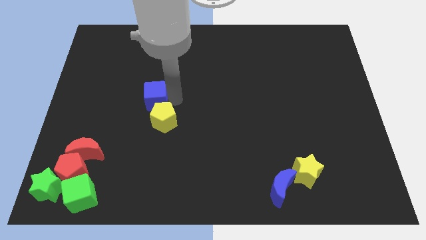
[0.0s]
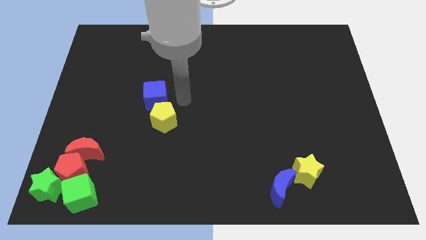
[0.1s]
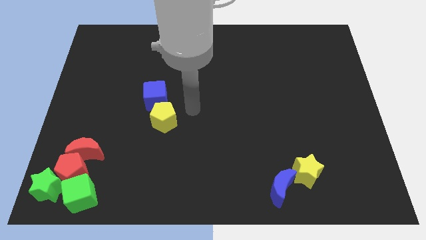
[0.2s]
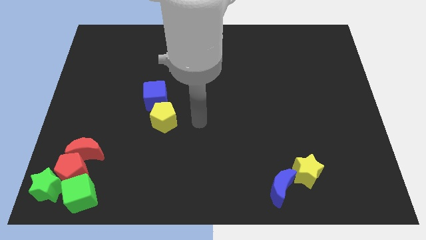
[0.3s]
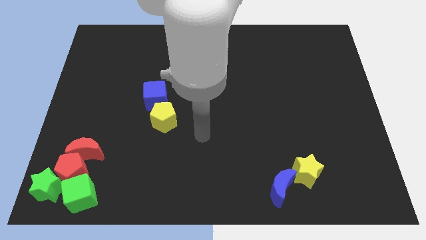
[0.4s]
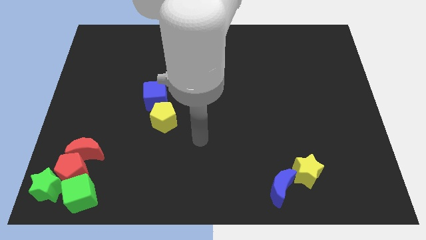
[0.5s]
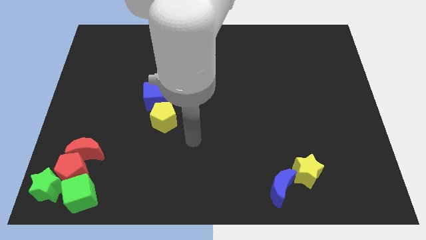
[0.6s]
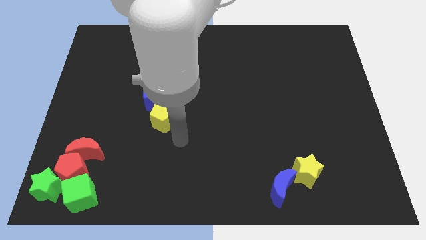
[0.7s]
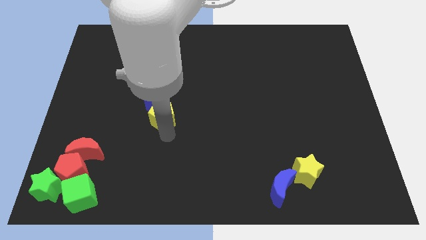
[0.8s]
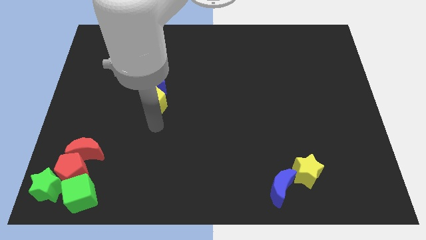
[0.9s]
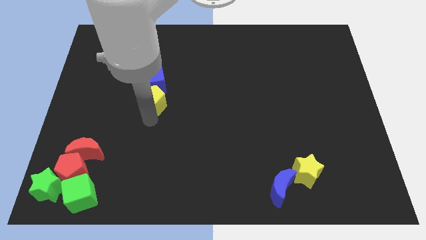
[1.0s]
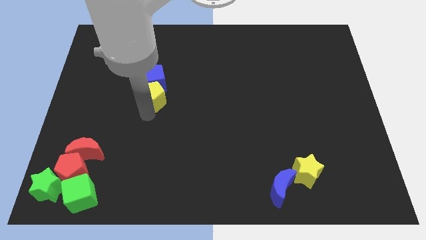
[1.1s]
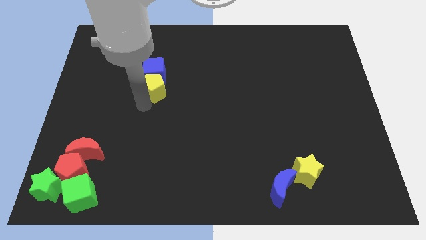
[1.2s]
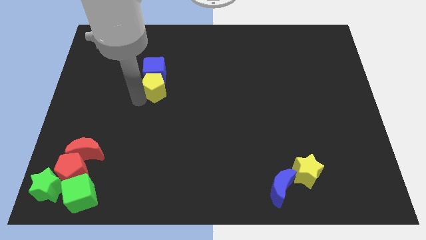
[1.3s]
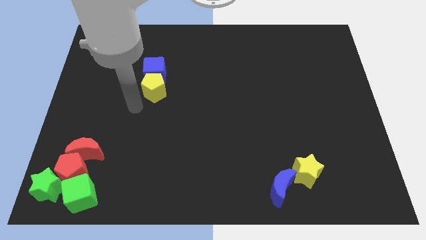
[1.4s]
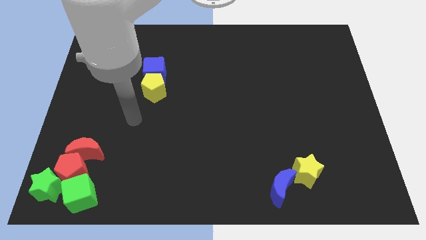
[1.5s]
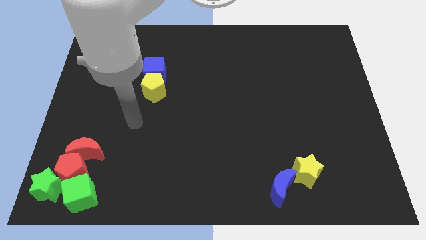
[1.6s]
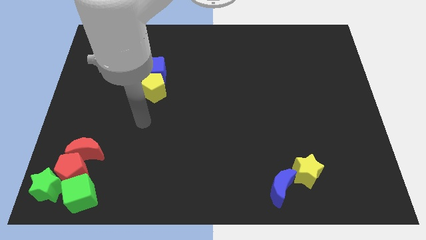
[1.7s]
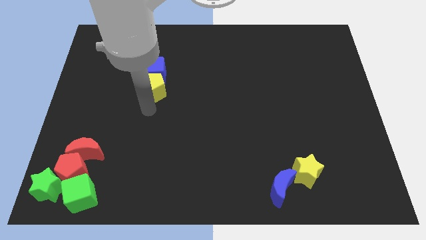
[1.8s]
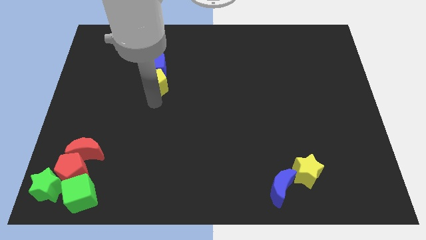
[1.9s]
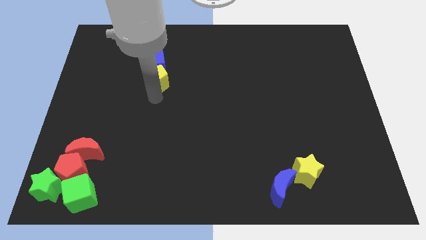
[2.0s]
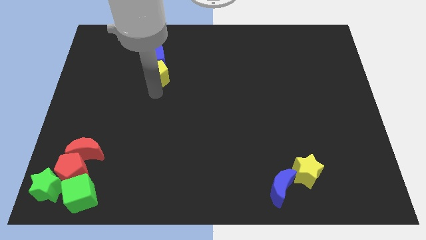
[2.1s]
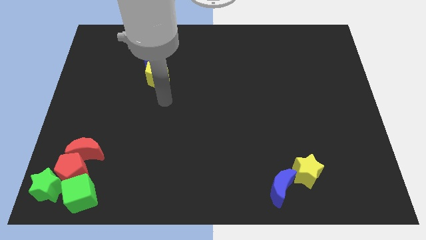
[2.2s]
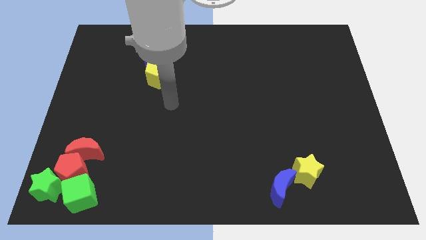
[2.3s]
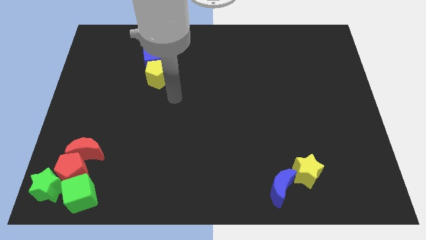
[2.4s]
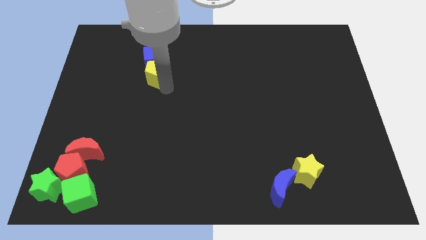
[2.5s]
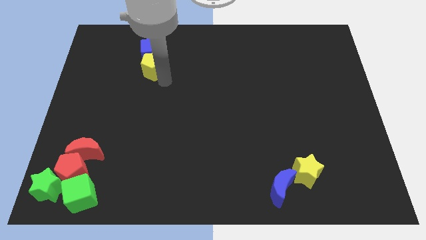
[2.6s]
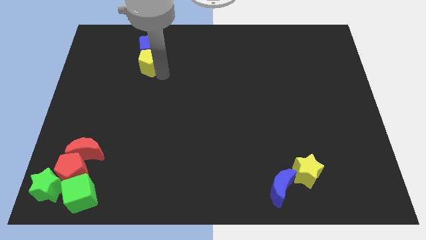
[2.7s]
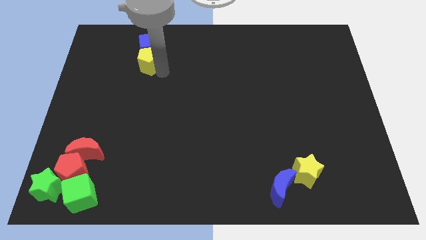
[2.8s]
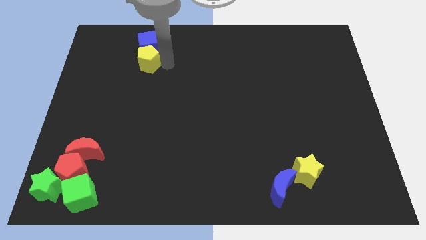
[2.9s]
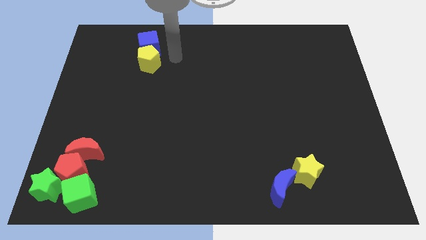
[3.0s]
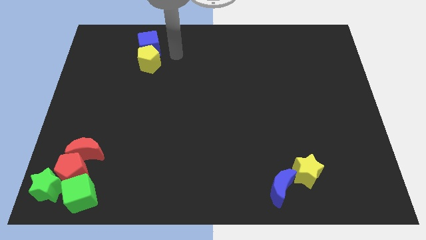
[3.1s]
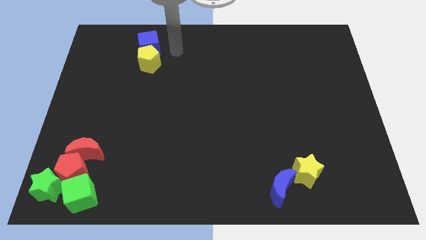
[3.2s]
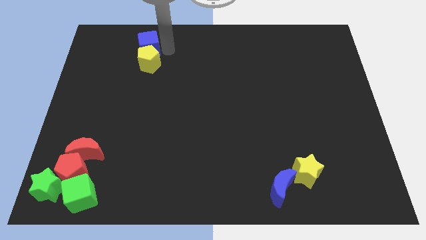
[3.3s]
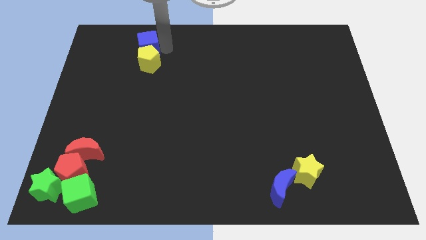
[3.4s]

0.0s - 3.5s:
push the blue cube with yellow pentagon towards the top left of the board

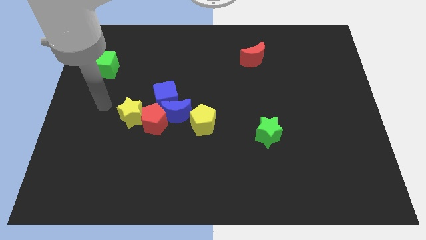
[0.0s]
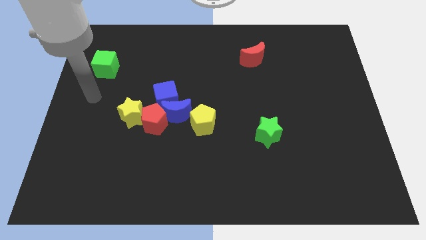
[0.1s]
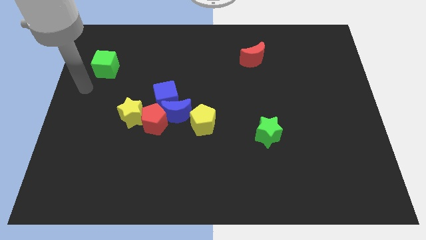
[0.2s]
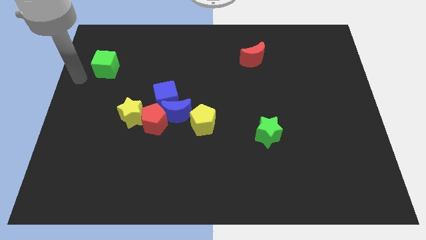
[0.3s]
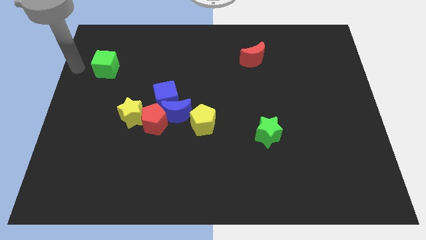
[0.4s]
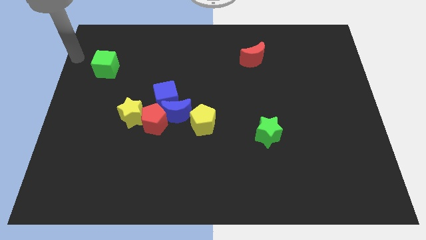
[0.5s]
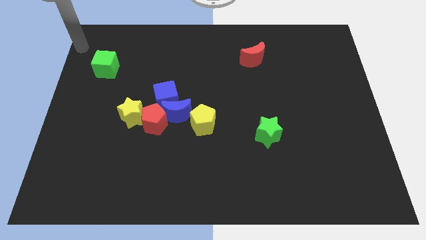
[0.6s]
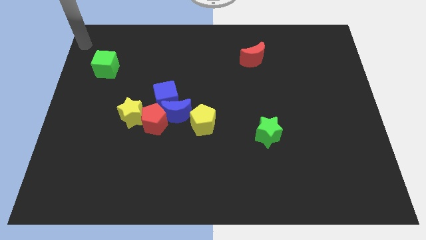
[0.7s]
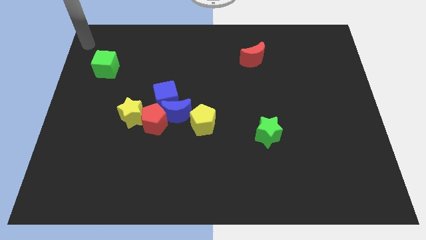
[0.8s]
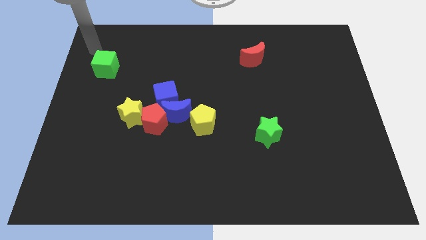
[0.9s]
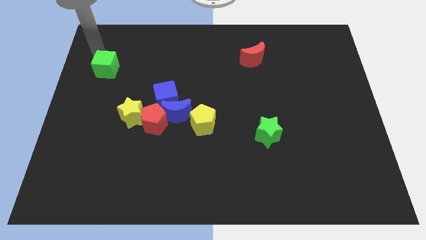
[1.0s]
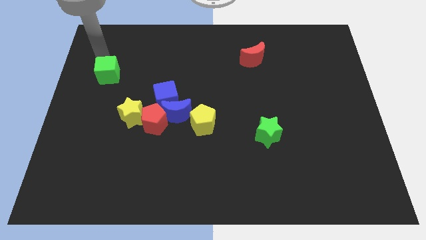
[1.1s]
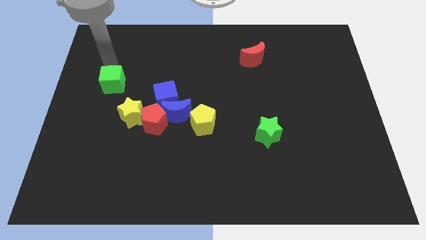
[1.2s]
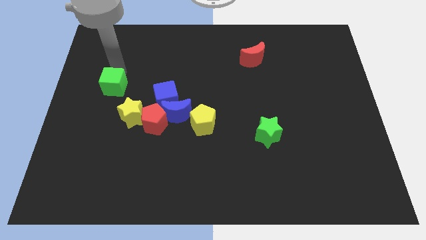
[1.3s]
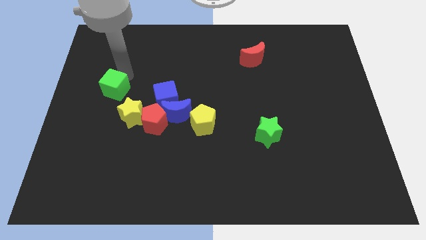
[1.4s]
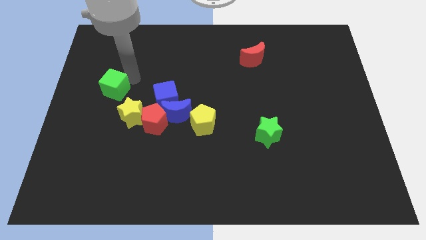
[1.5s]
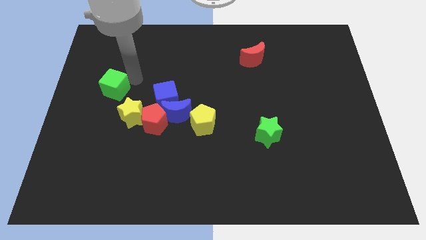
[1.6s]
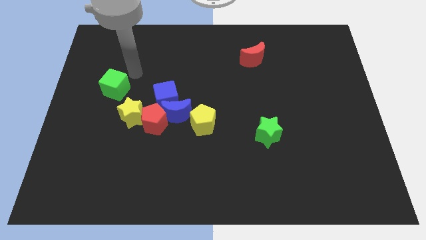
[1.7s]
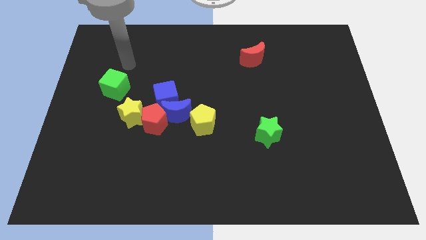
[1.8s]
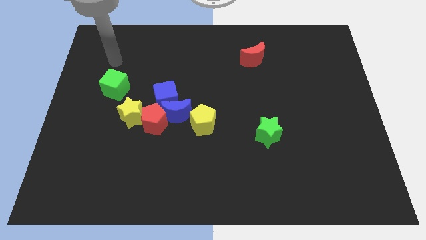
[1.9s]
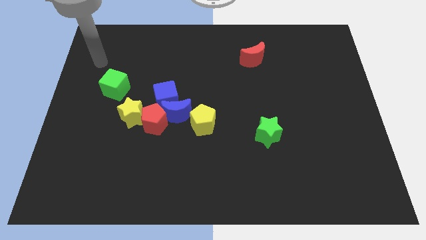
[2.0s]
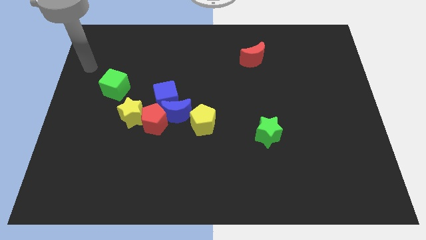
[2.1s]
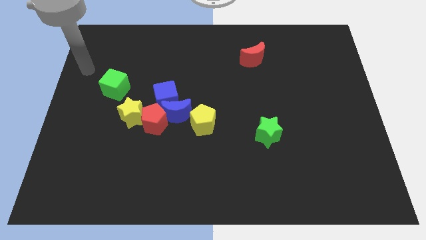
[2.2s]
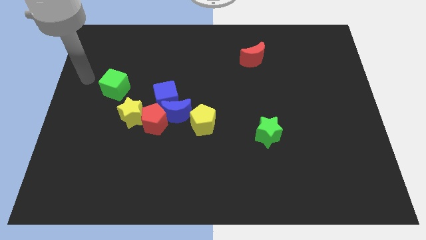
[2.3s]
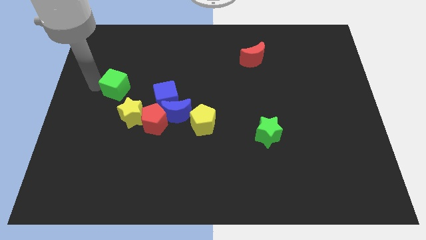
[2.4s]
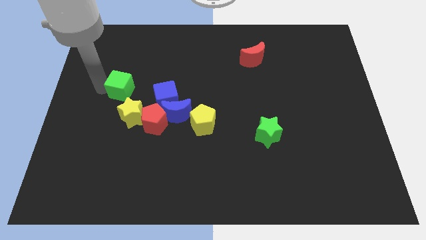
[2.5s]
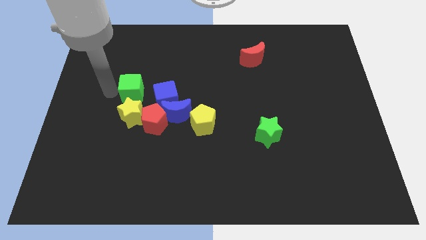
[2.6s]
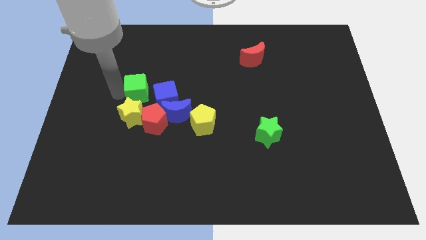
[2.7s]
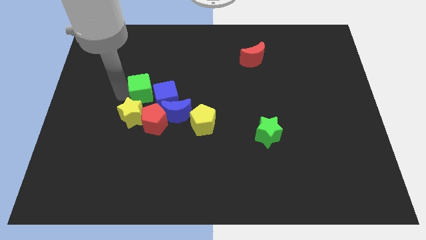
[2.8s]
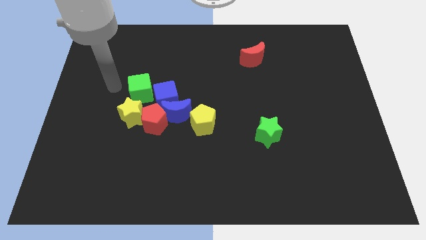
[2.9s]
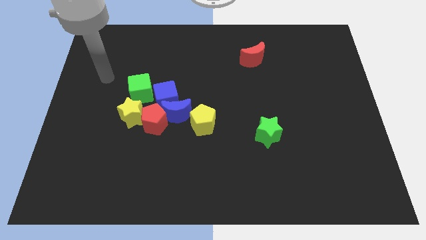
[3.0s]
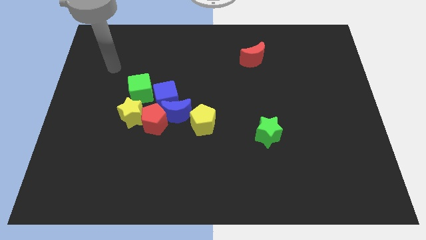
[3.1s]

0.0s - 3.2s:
push the green cube to the left of the blue cube

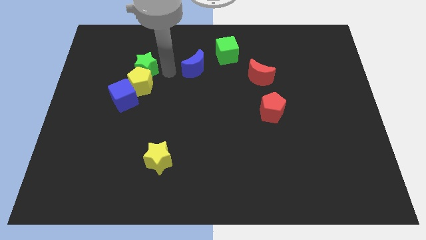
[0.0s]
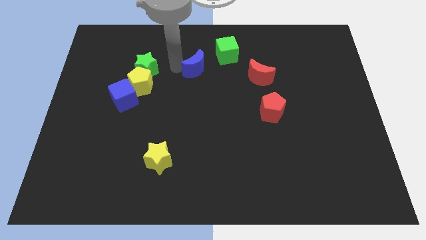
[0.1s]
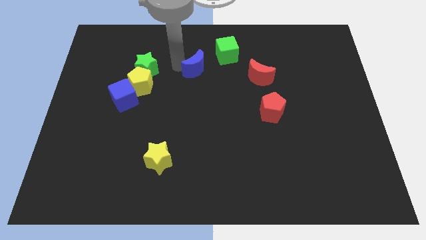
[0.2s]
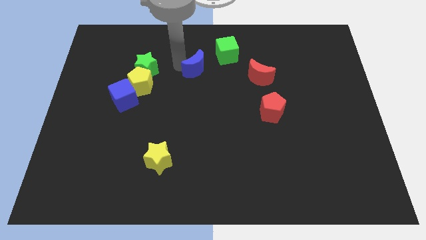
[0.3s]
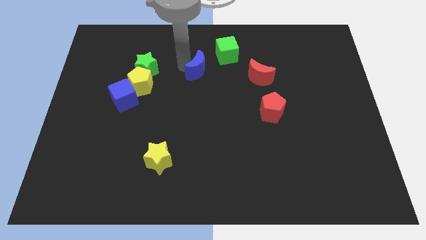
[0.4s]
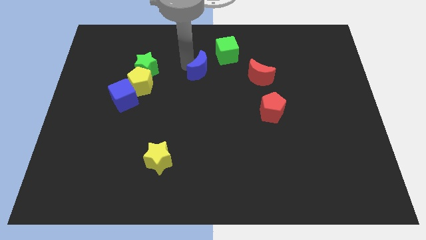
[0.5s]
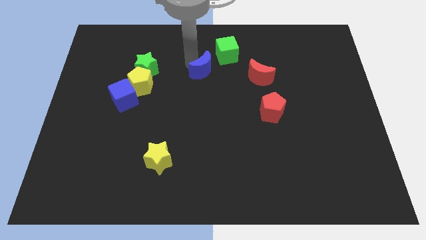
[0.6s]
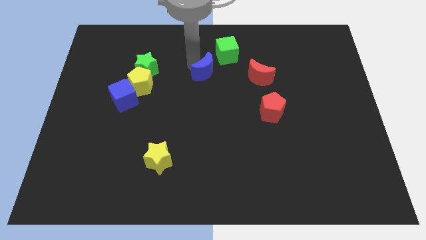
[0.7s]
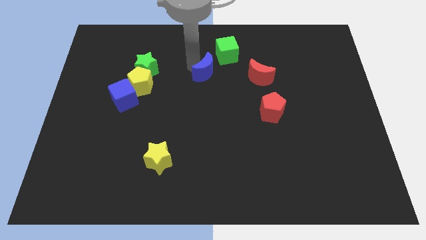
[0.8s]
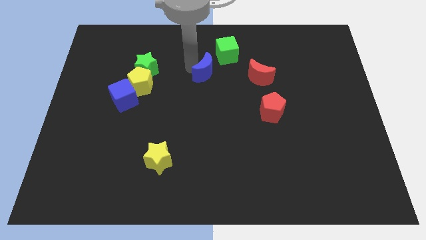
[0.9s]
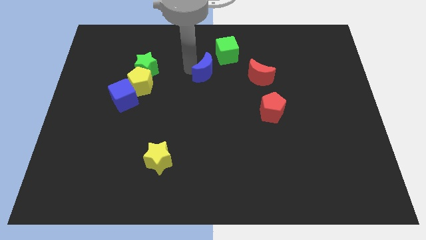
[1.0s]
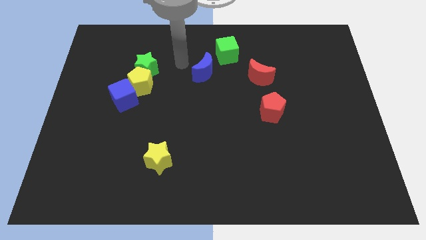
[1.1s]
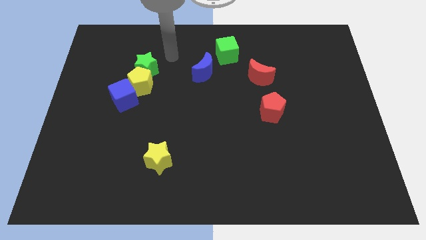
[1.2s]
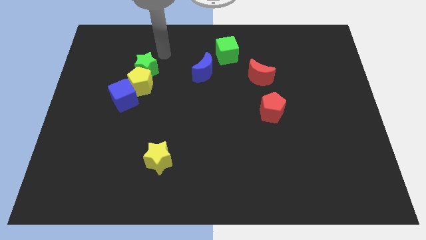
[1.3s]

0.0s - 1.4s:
push the blue moon slightly towards the center

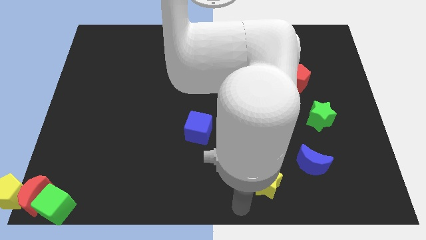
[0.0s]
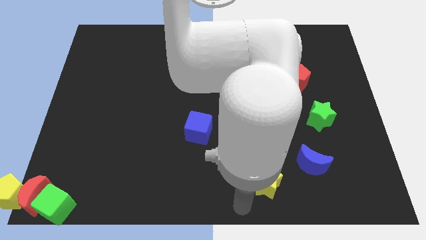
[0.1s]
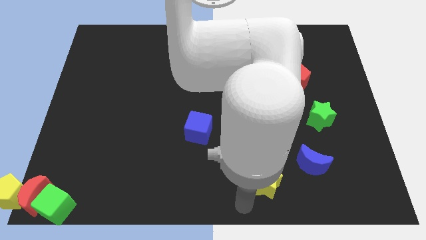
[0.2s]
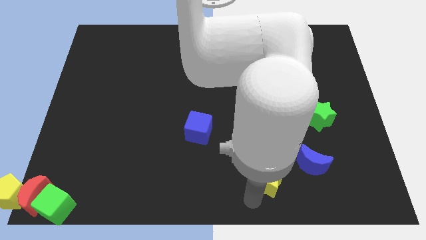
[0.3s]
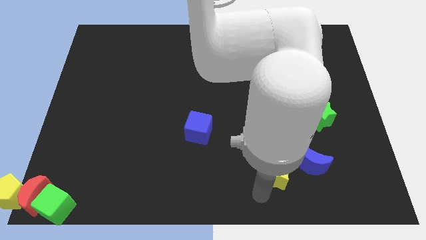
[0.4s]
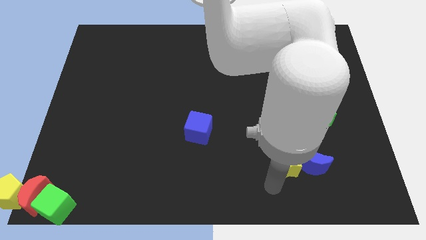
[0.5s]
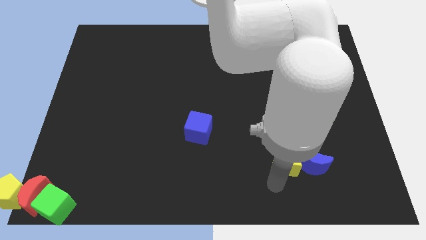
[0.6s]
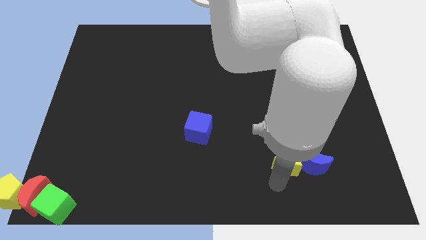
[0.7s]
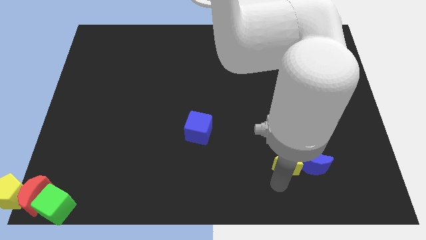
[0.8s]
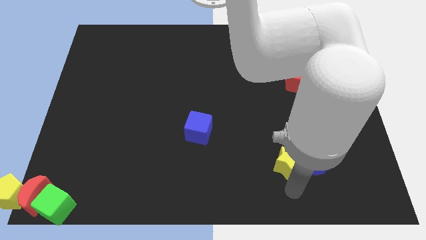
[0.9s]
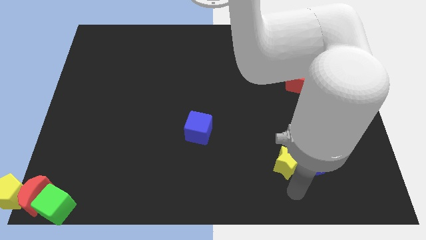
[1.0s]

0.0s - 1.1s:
make the yellow star to touch the blue crescent
